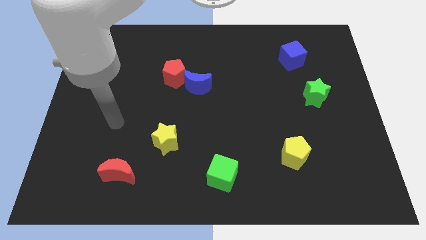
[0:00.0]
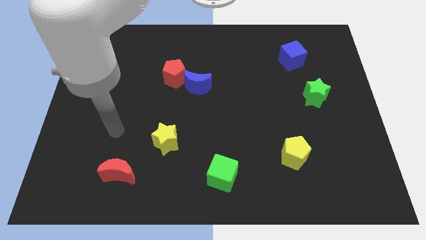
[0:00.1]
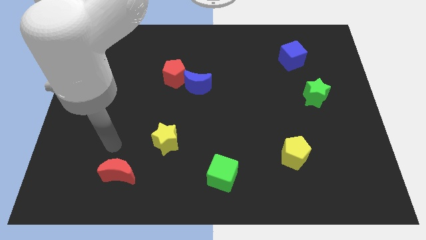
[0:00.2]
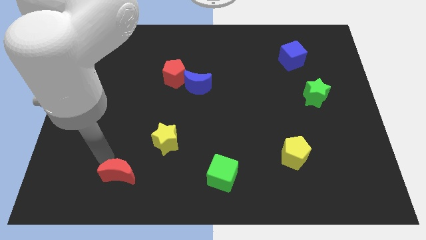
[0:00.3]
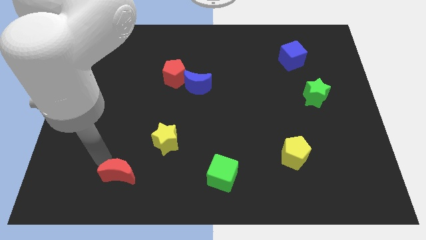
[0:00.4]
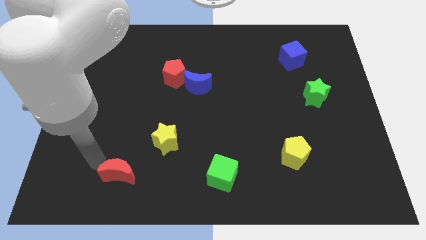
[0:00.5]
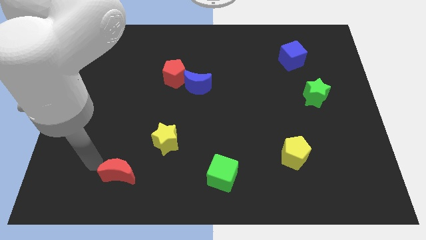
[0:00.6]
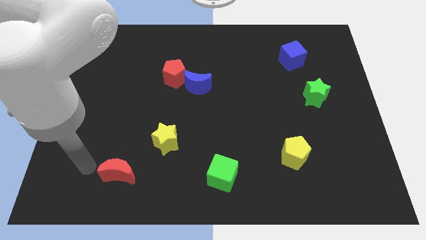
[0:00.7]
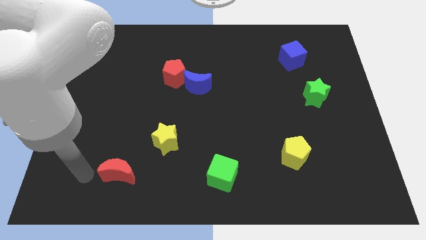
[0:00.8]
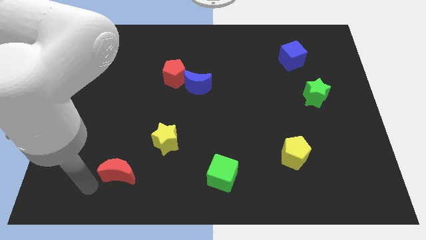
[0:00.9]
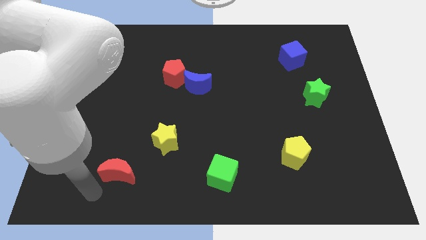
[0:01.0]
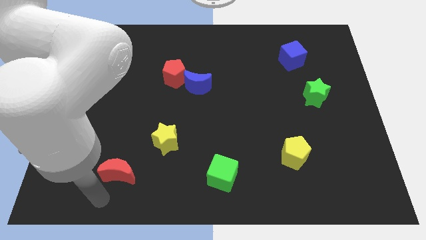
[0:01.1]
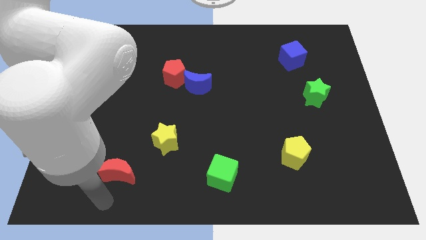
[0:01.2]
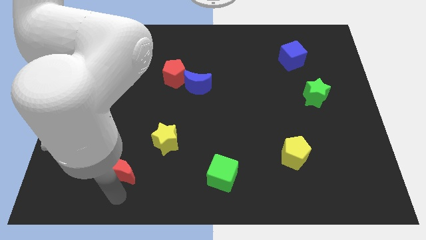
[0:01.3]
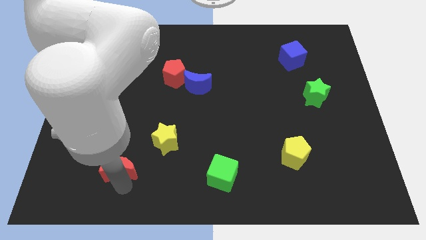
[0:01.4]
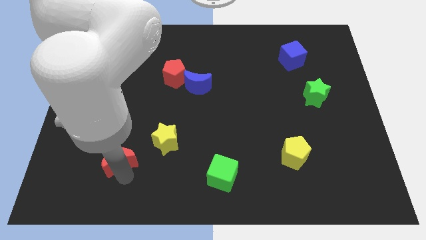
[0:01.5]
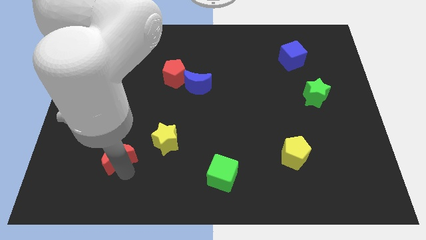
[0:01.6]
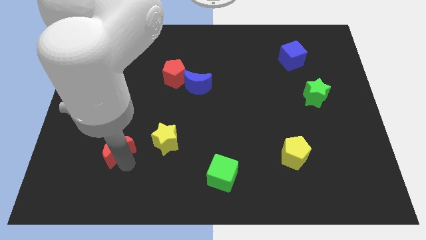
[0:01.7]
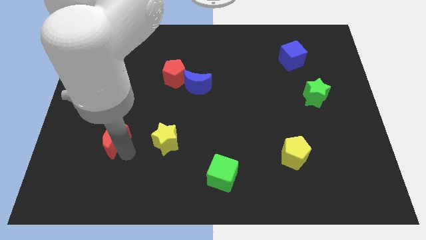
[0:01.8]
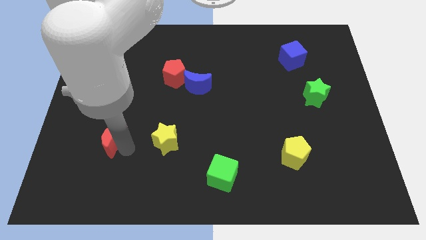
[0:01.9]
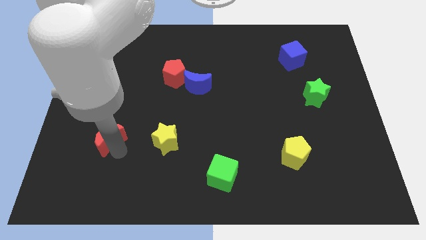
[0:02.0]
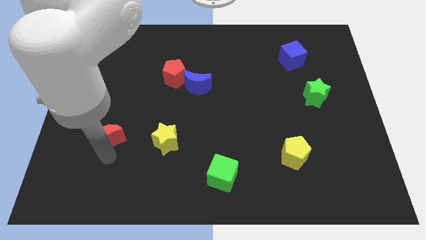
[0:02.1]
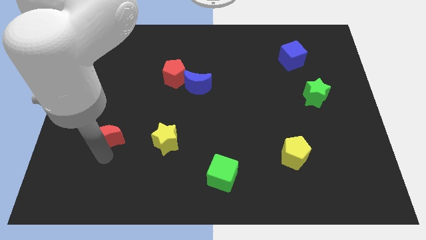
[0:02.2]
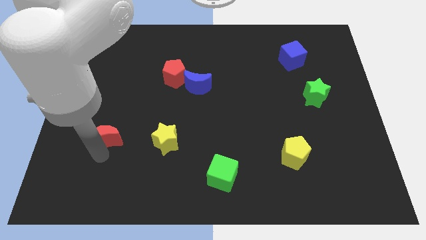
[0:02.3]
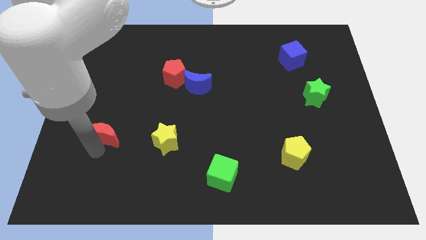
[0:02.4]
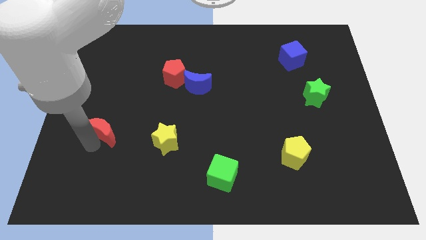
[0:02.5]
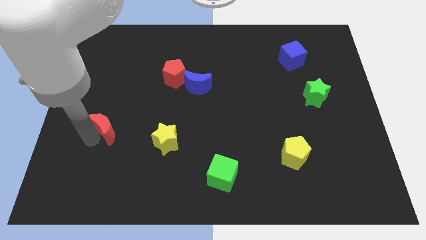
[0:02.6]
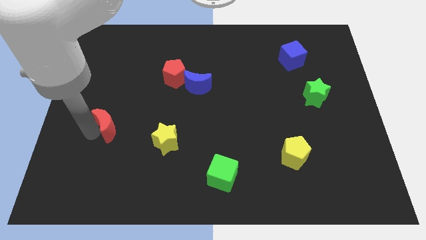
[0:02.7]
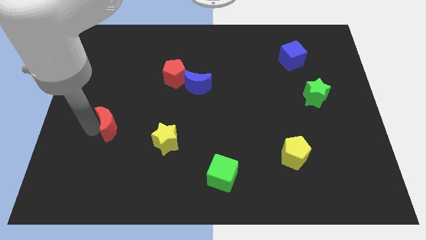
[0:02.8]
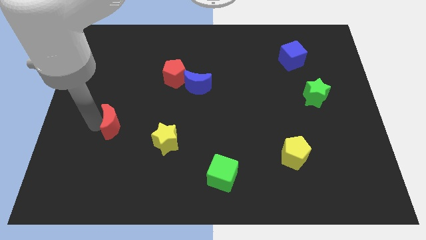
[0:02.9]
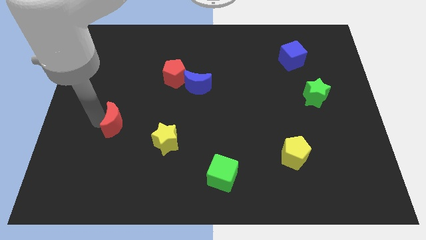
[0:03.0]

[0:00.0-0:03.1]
move red moon to the center

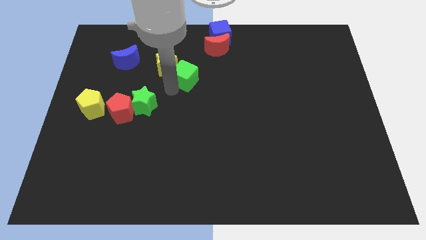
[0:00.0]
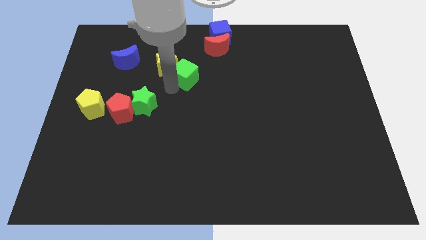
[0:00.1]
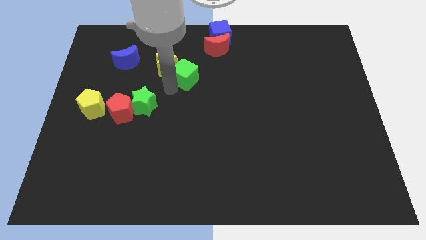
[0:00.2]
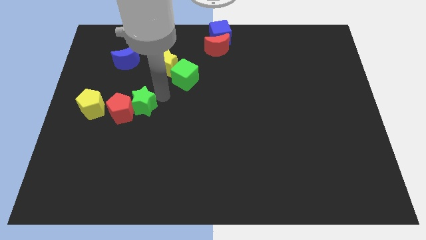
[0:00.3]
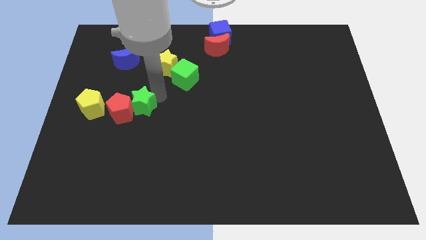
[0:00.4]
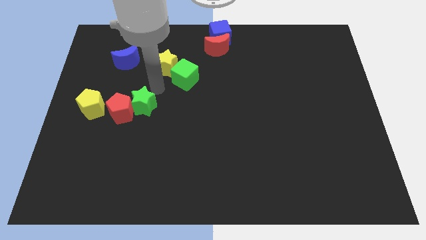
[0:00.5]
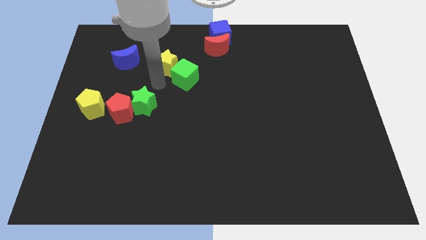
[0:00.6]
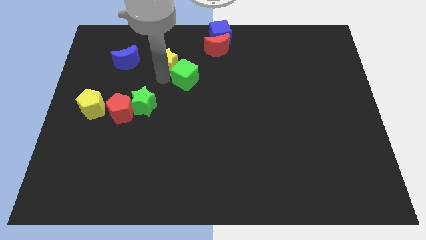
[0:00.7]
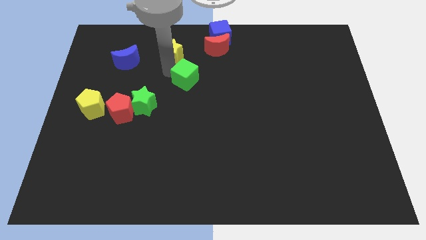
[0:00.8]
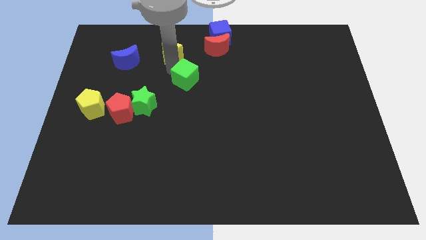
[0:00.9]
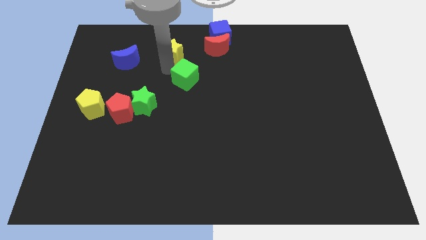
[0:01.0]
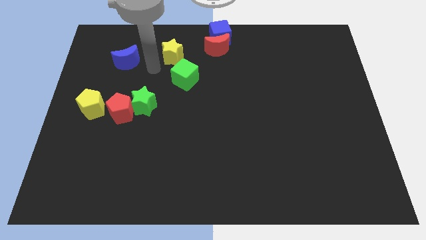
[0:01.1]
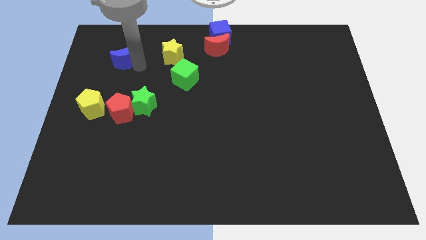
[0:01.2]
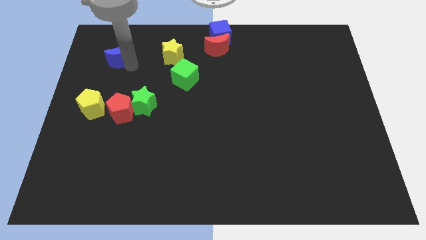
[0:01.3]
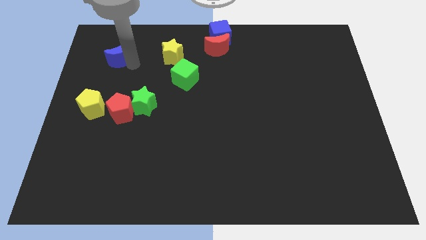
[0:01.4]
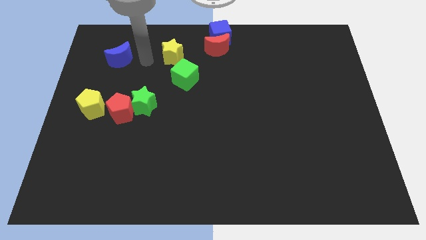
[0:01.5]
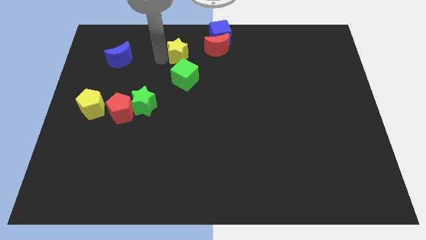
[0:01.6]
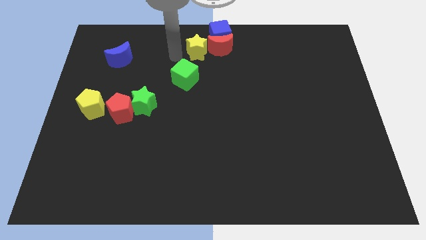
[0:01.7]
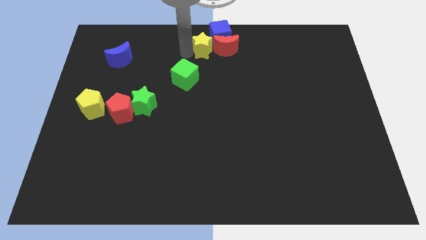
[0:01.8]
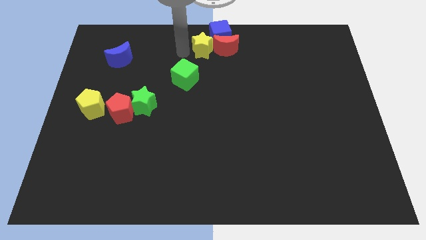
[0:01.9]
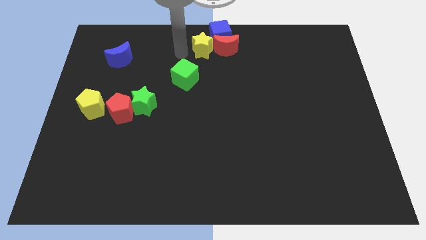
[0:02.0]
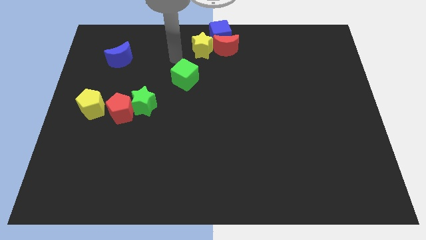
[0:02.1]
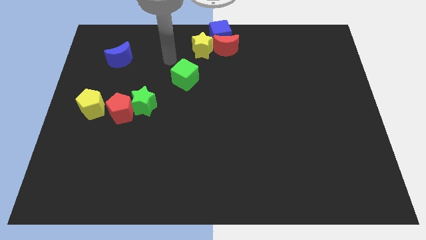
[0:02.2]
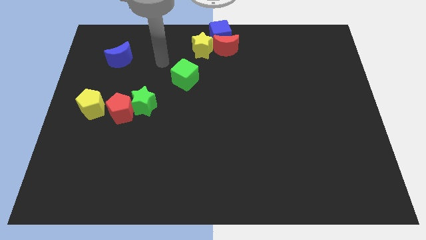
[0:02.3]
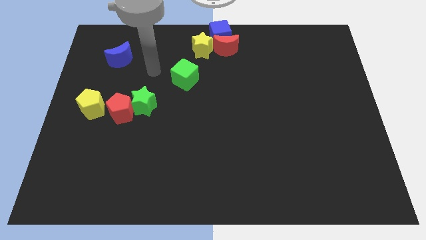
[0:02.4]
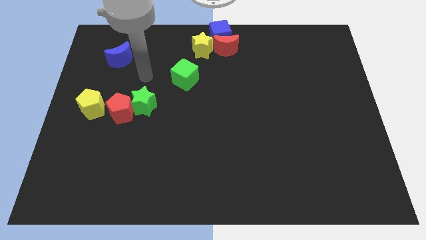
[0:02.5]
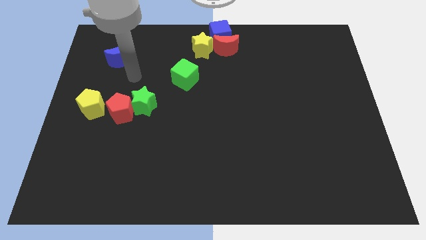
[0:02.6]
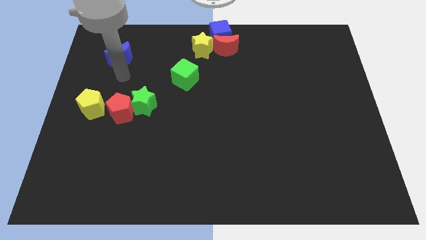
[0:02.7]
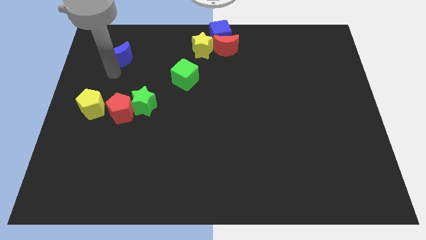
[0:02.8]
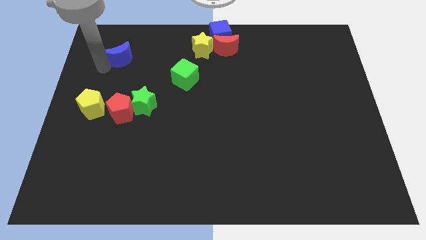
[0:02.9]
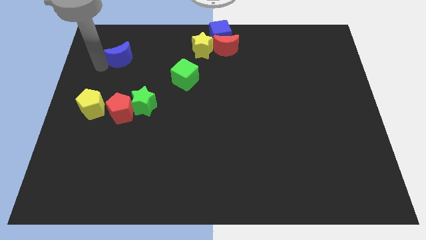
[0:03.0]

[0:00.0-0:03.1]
move yellow star to the left of red crescent

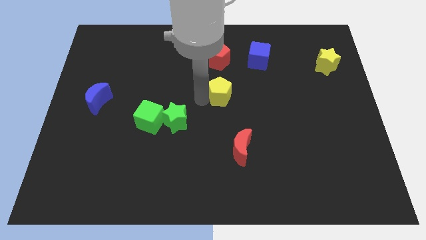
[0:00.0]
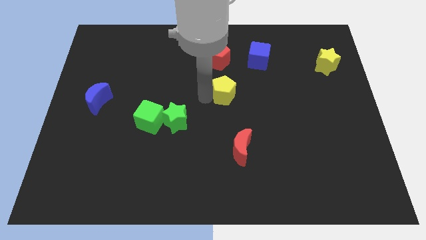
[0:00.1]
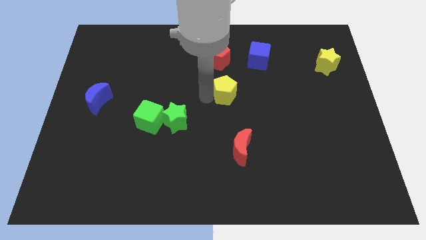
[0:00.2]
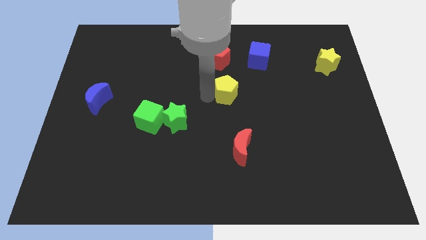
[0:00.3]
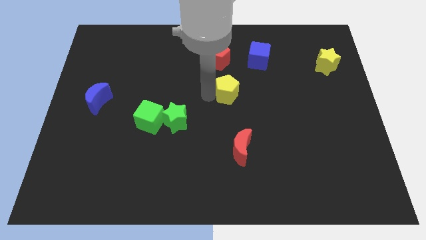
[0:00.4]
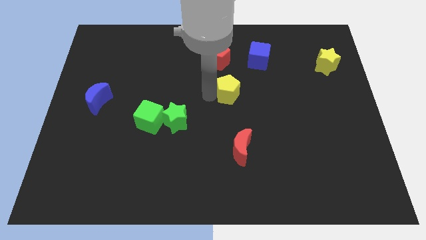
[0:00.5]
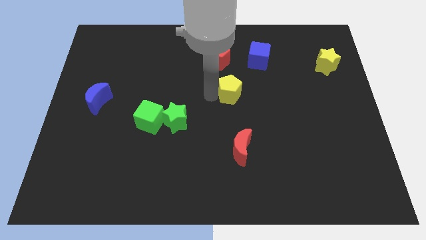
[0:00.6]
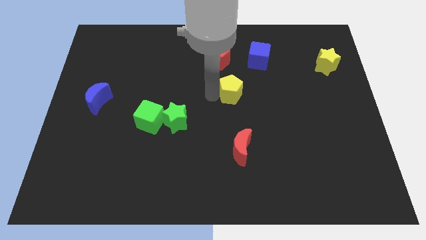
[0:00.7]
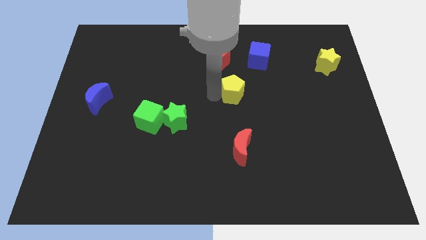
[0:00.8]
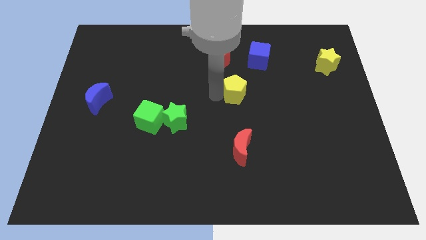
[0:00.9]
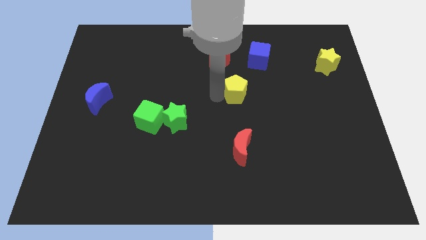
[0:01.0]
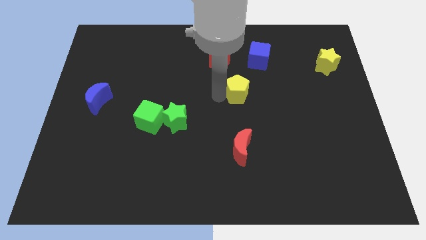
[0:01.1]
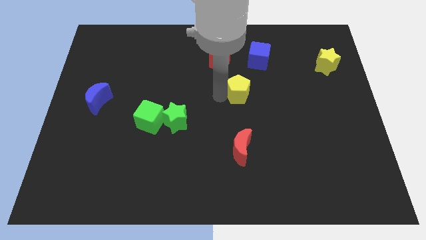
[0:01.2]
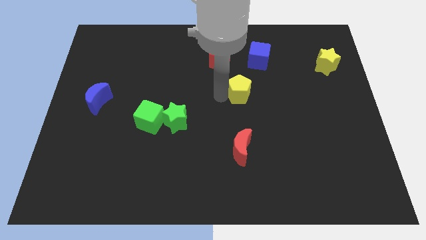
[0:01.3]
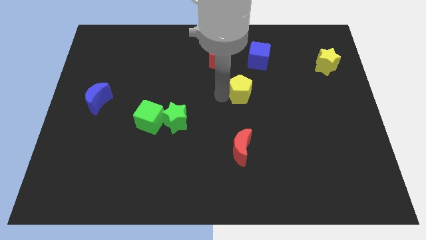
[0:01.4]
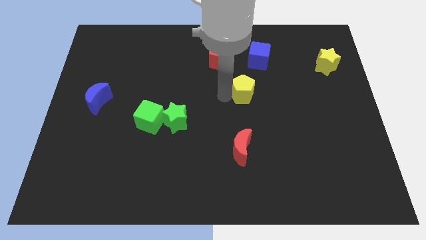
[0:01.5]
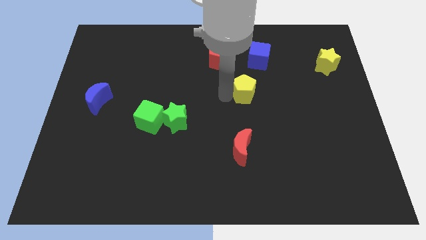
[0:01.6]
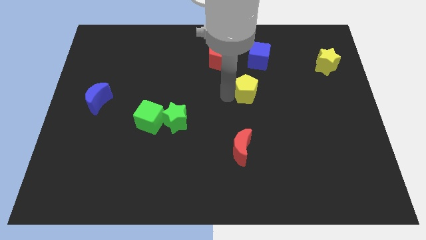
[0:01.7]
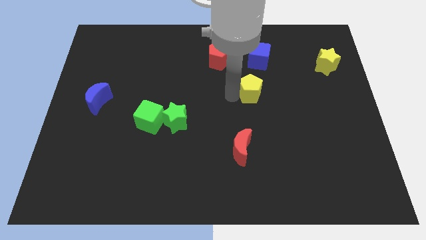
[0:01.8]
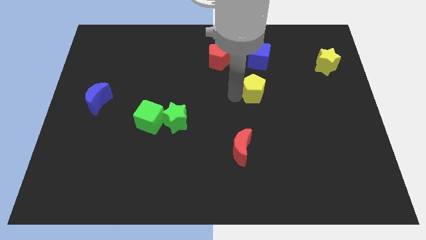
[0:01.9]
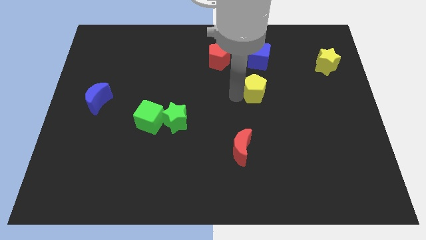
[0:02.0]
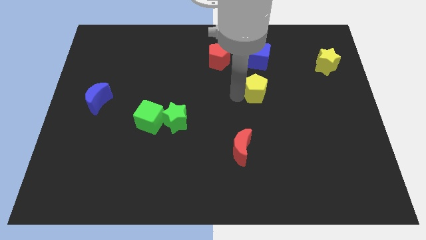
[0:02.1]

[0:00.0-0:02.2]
place the yellow pentagon in between the blue cube and red crescent

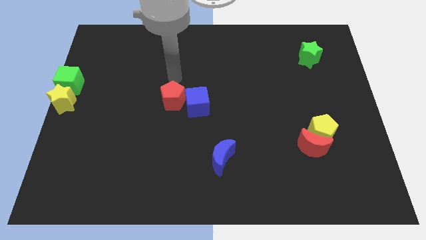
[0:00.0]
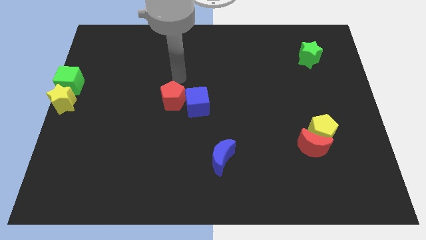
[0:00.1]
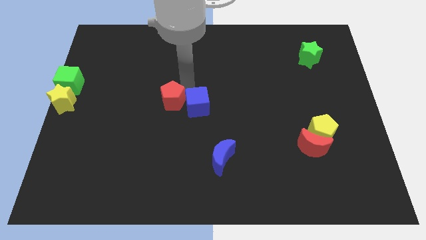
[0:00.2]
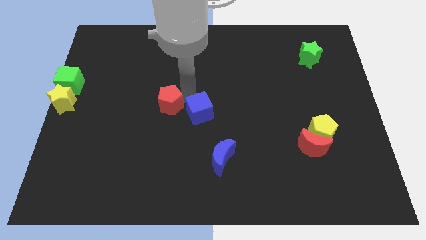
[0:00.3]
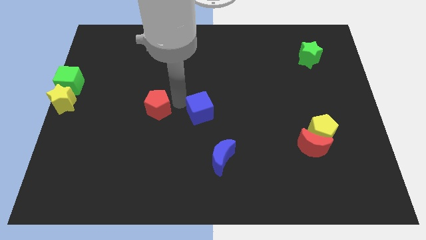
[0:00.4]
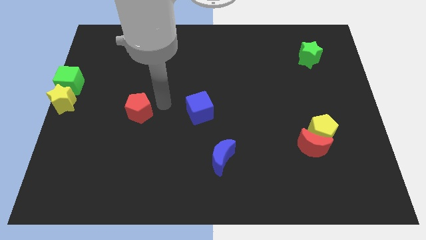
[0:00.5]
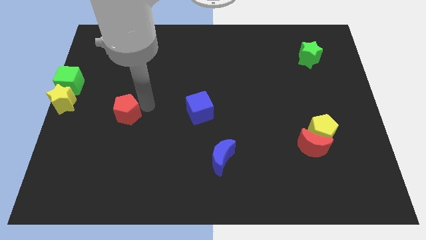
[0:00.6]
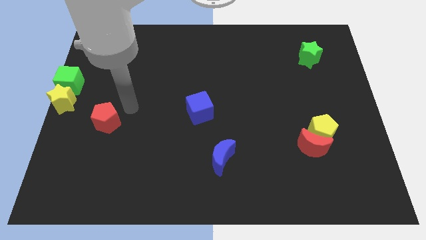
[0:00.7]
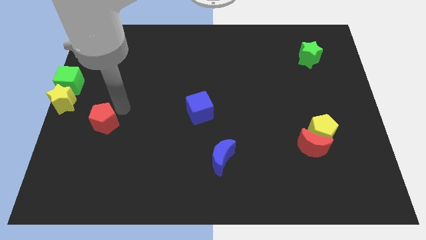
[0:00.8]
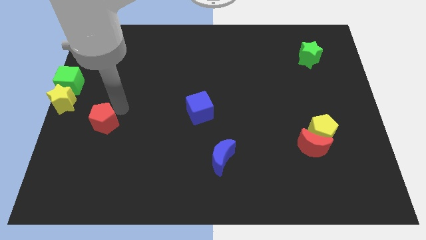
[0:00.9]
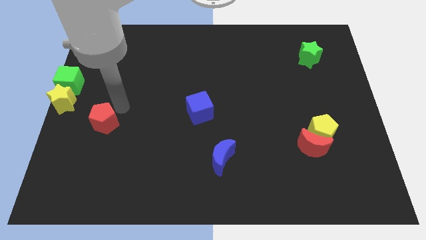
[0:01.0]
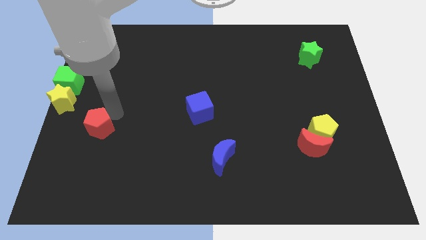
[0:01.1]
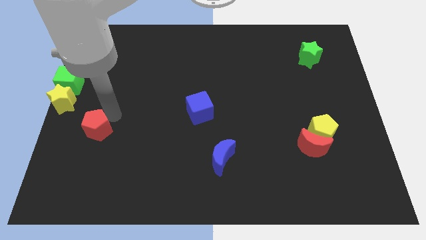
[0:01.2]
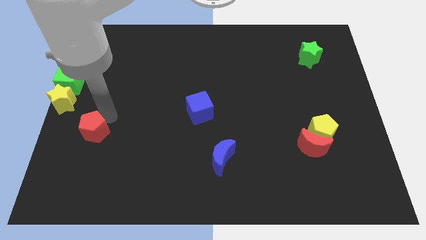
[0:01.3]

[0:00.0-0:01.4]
push the red pentagon to the bottom right of the yellow star
